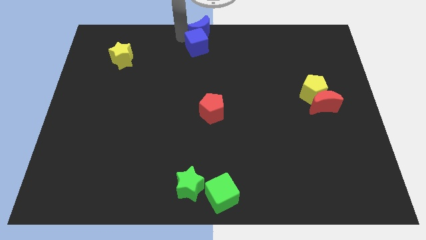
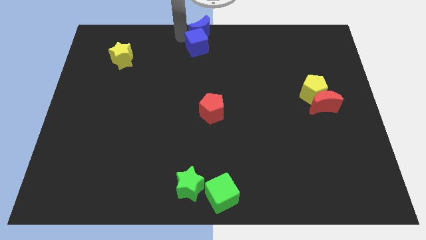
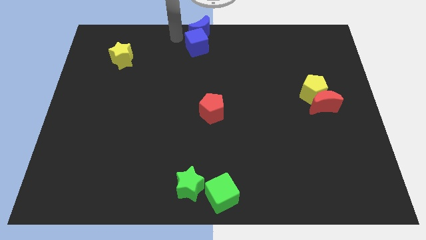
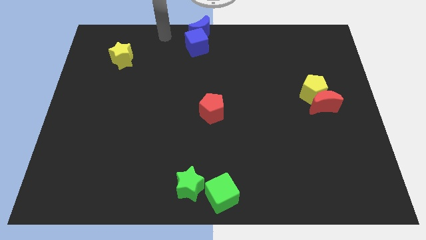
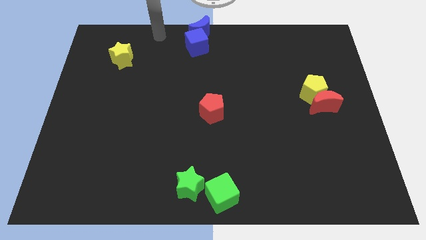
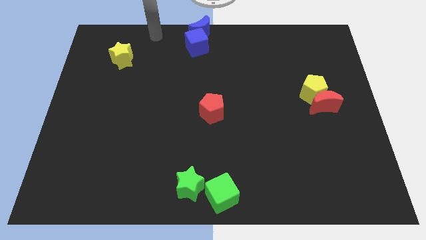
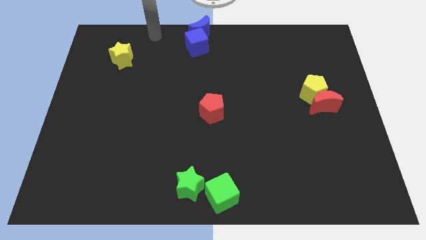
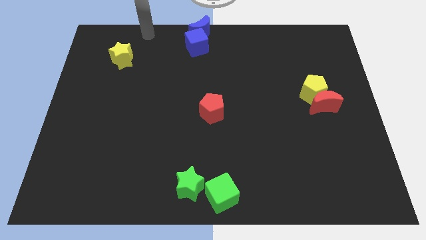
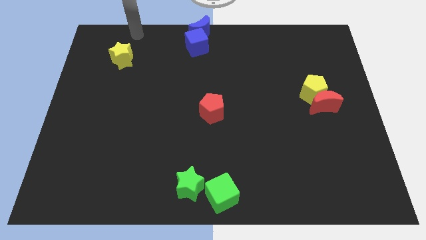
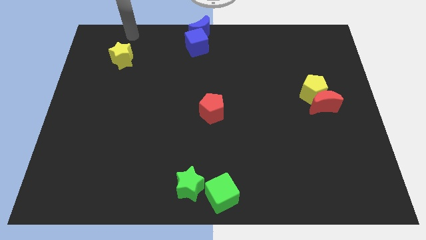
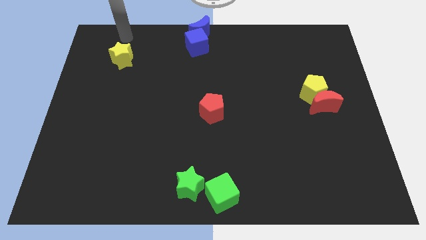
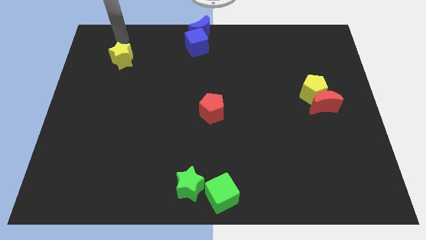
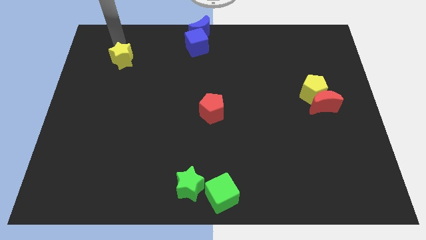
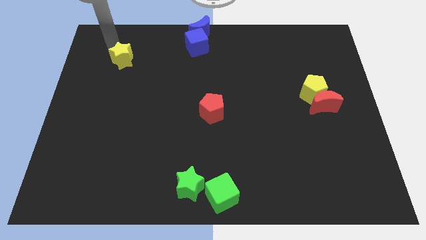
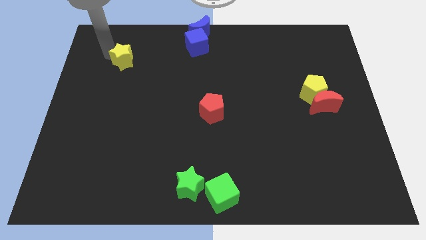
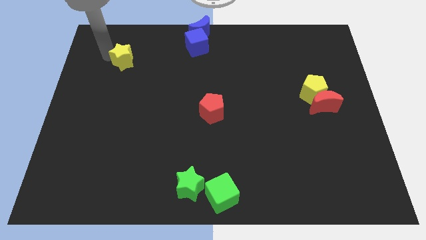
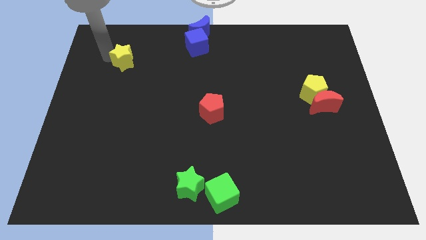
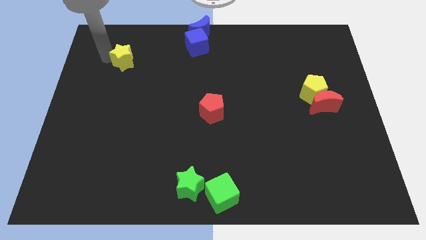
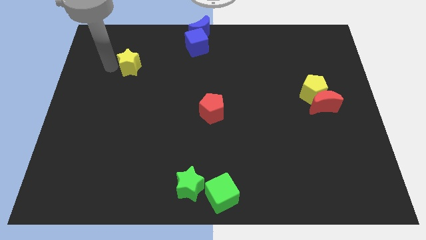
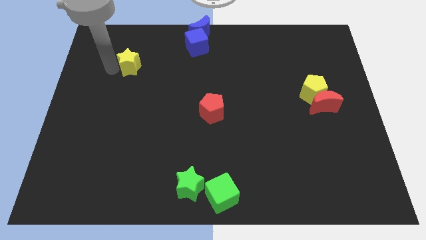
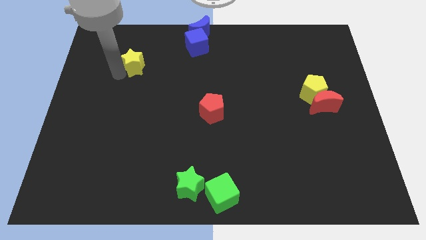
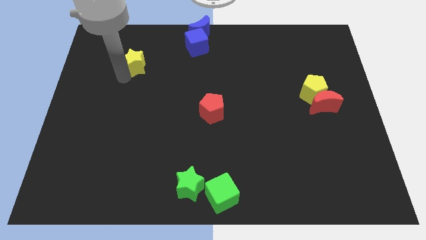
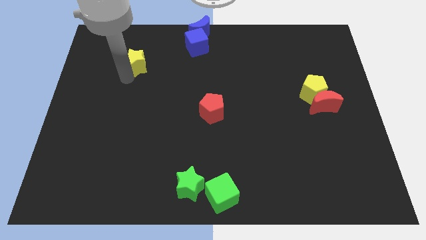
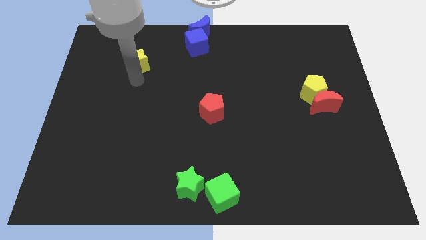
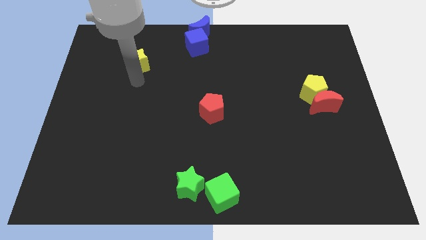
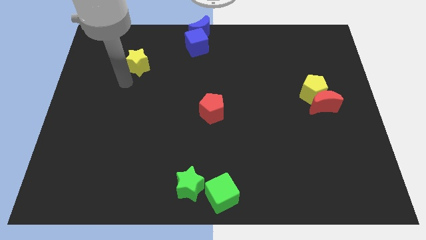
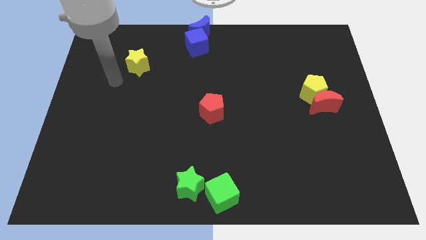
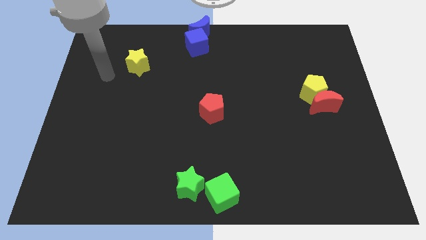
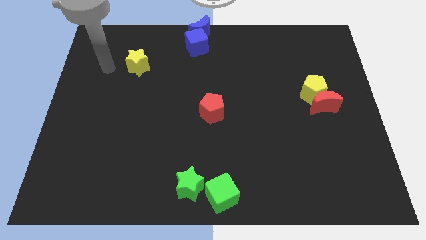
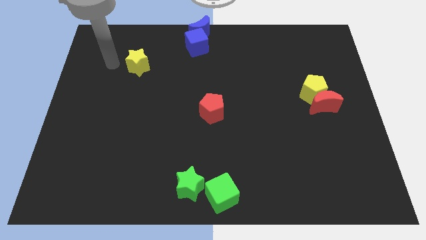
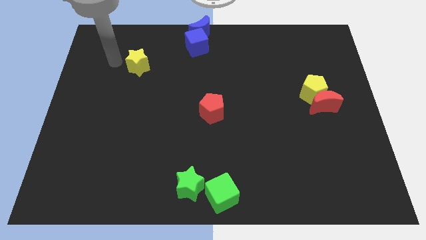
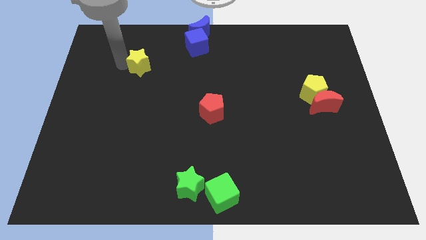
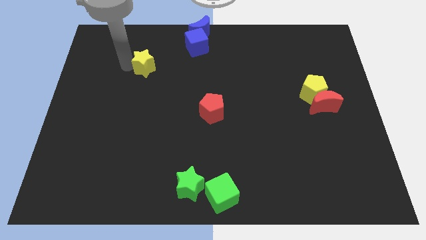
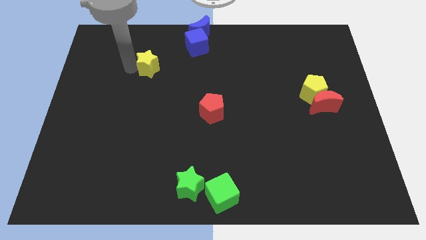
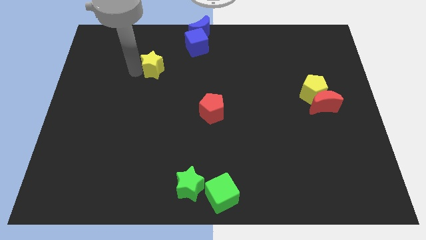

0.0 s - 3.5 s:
move the yellow star slightly to the right

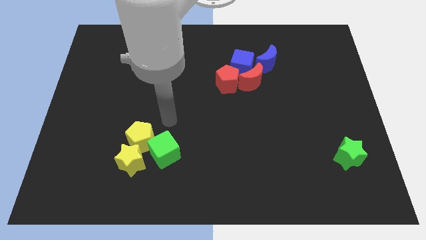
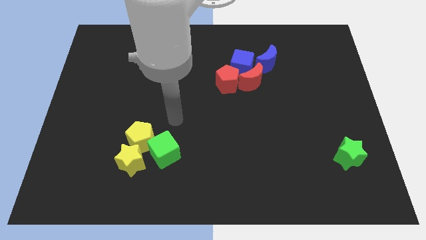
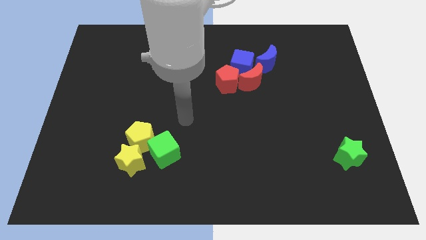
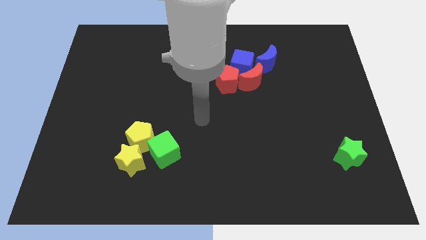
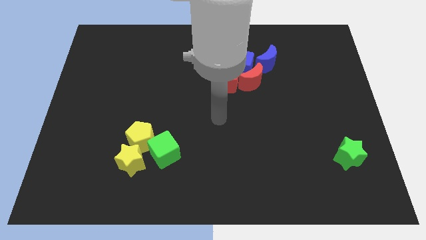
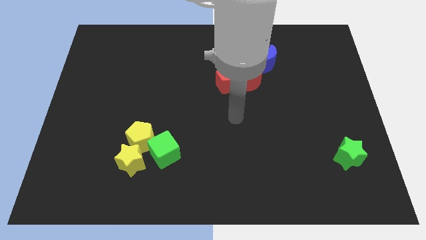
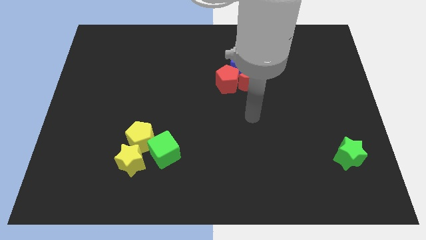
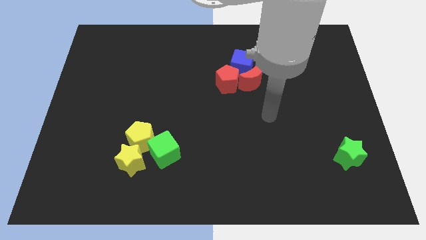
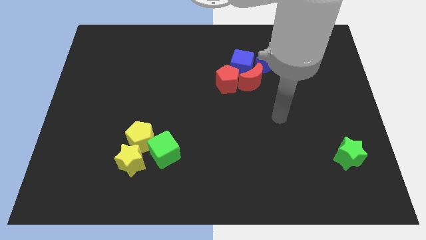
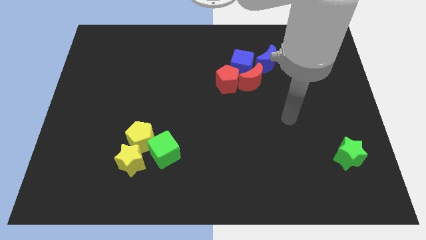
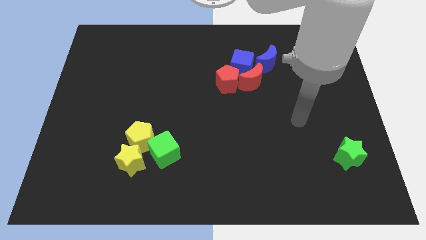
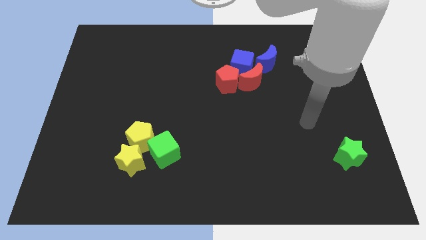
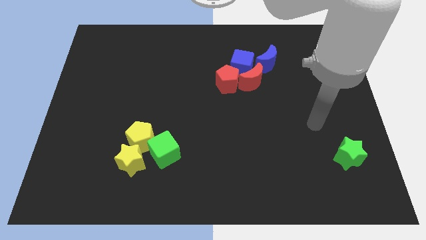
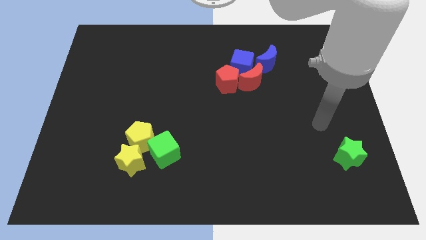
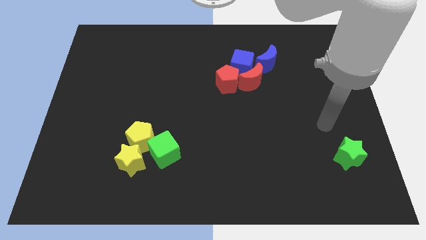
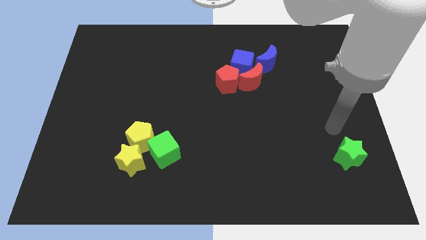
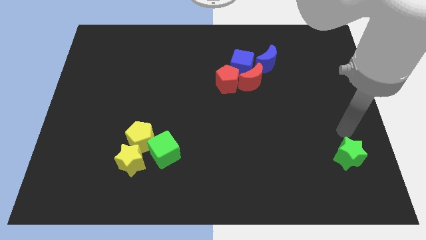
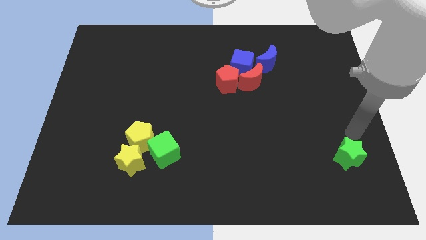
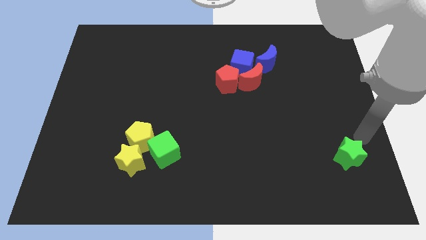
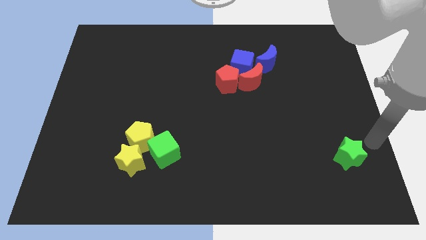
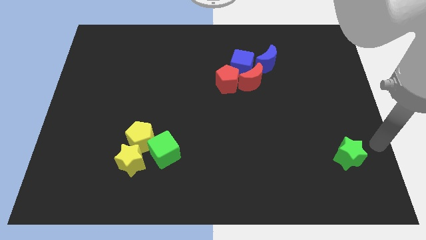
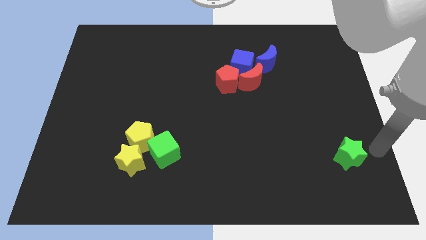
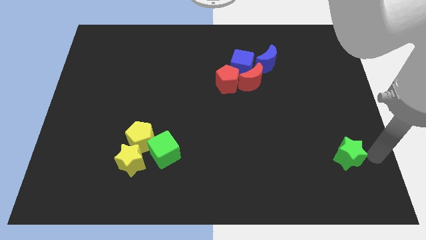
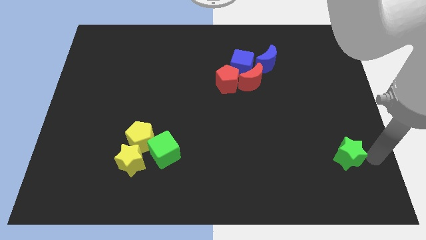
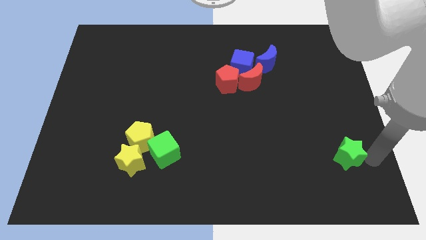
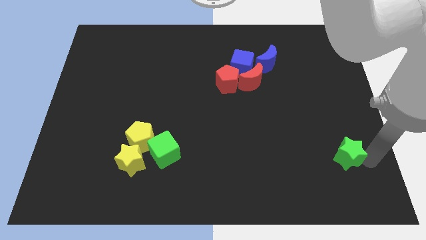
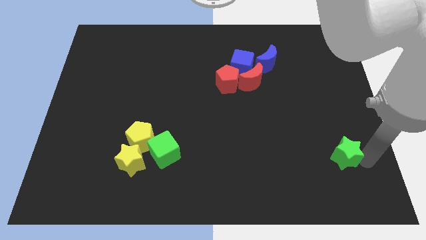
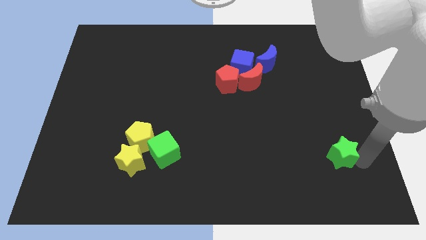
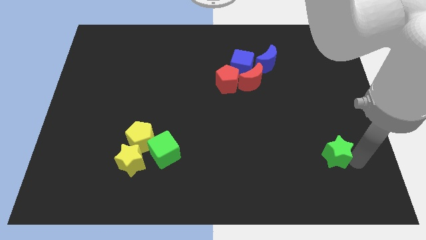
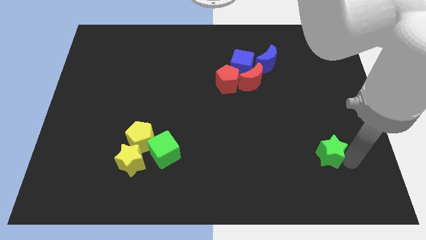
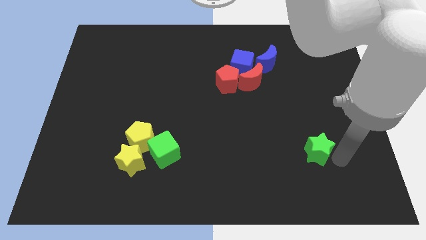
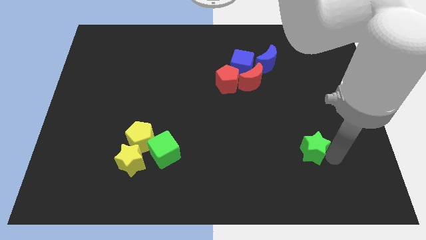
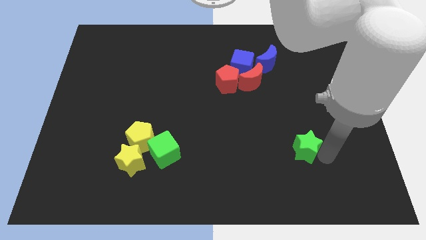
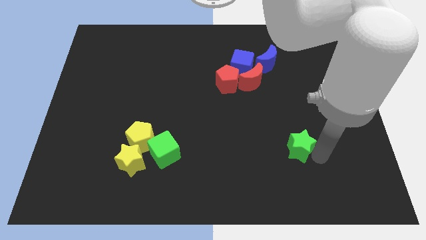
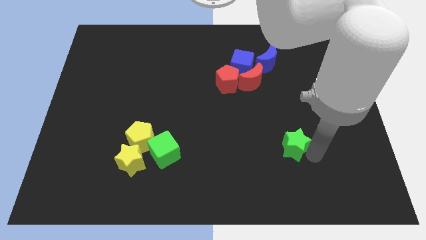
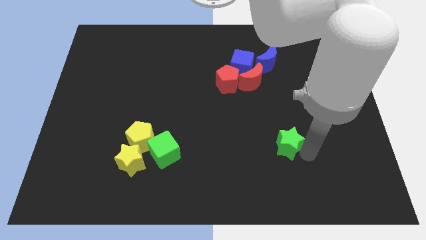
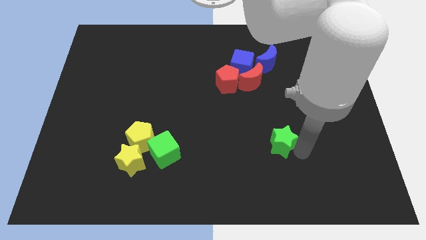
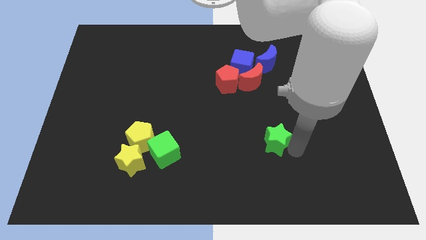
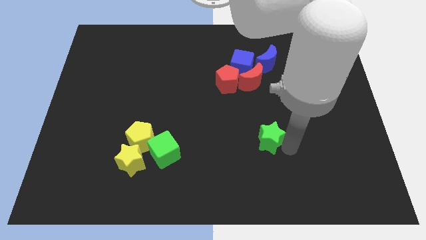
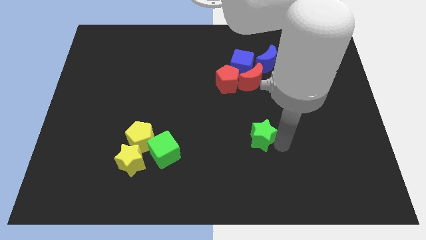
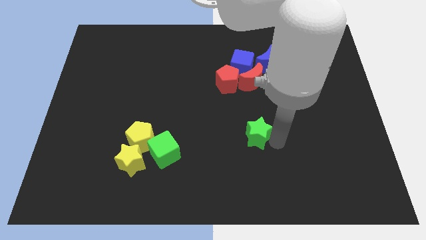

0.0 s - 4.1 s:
push the green star to the left of the board

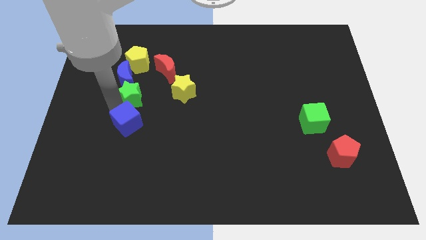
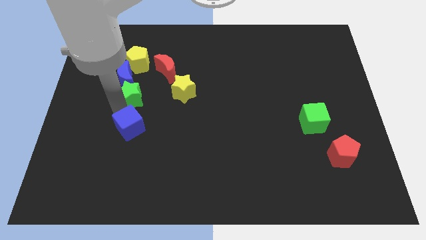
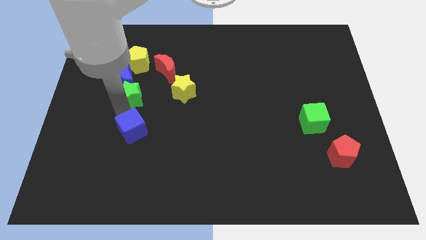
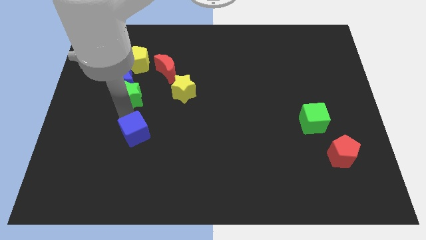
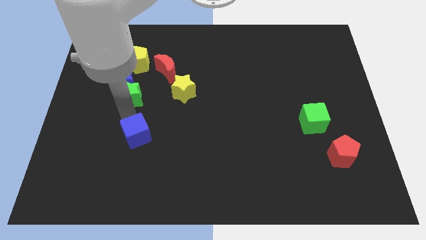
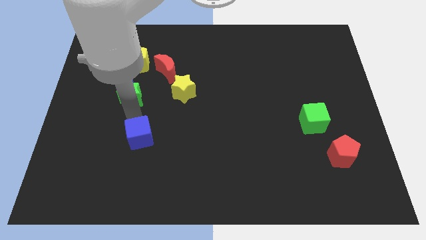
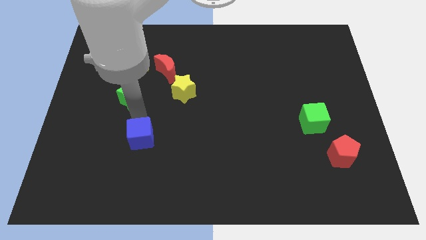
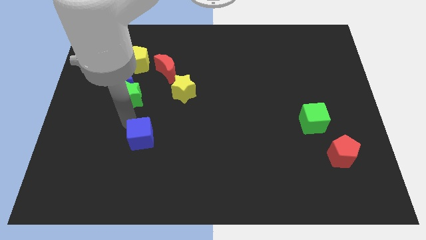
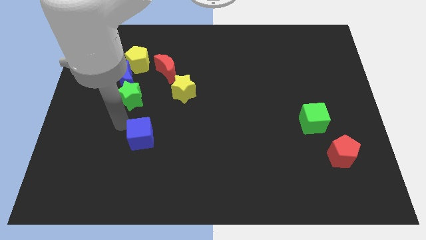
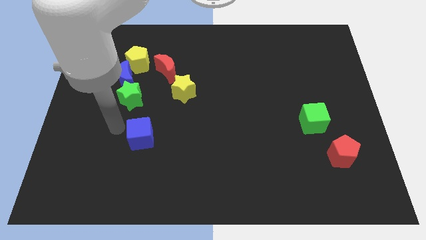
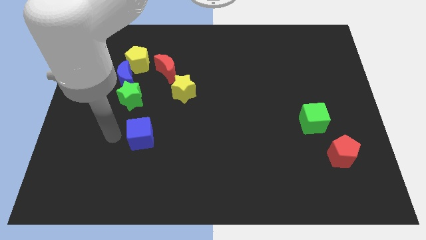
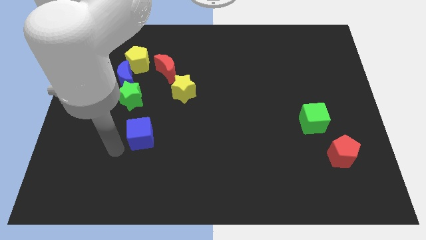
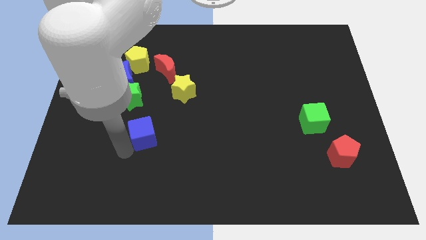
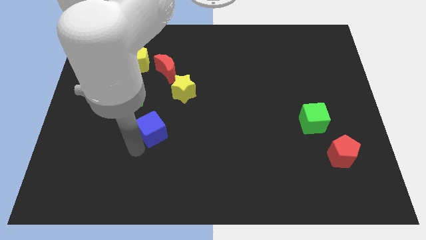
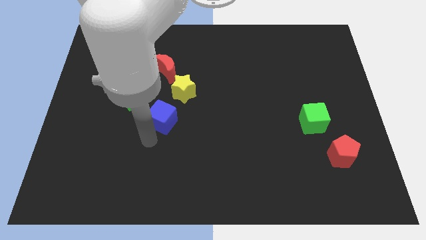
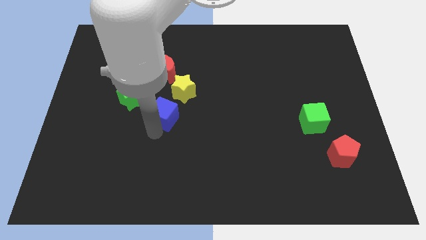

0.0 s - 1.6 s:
move the blue cube to the bottom left of the yellow star
